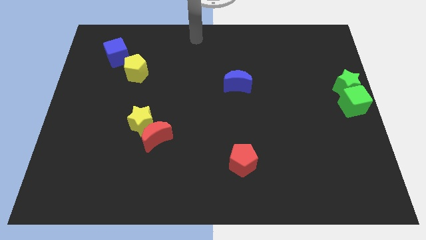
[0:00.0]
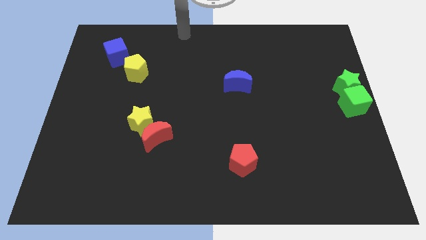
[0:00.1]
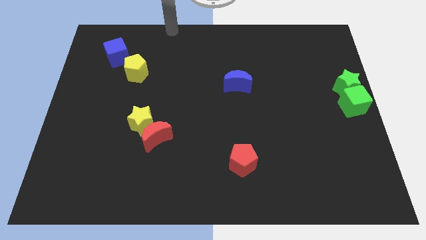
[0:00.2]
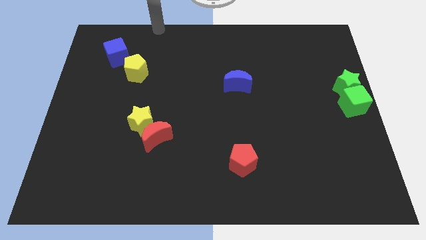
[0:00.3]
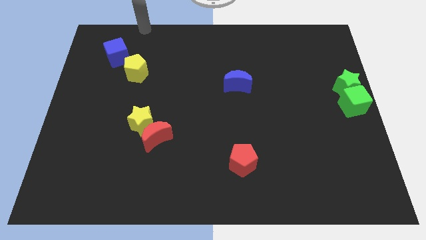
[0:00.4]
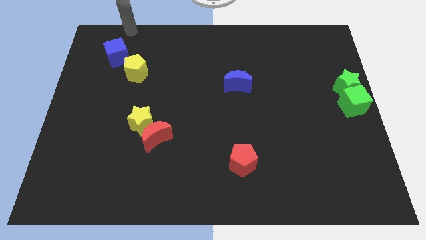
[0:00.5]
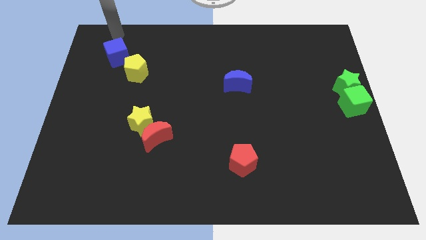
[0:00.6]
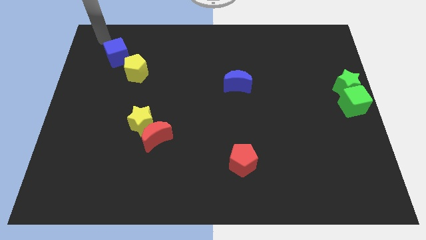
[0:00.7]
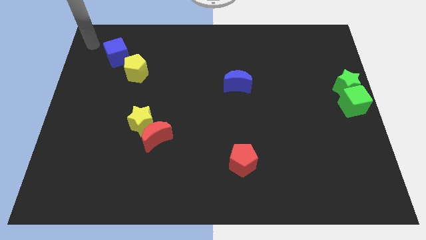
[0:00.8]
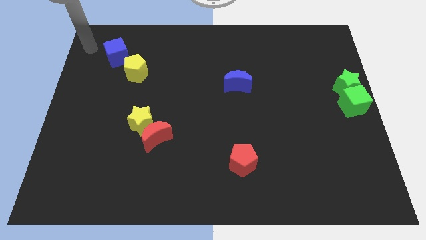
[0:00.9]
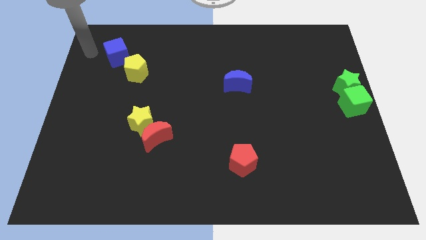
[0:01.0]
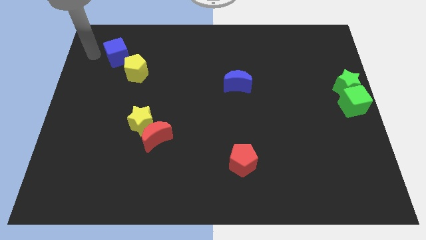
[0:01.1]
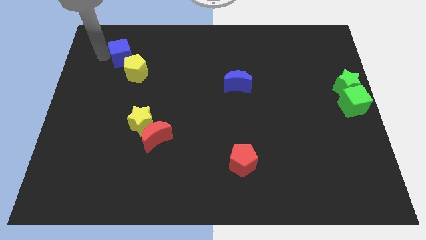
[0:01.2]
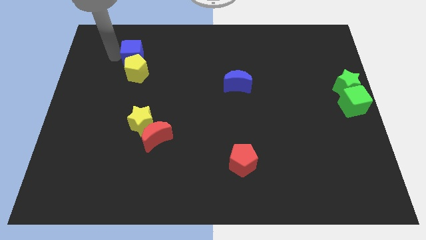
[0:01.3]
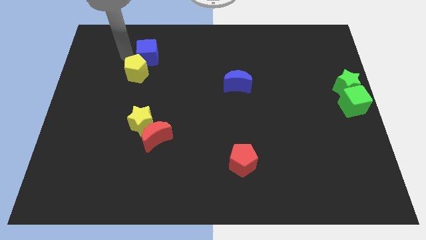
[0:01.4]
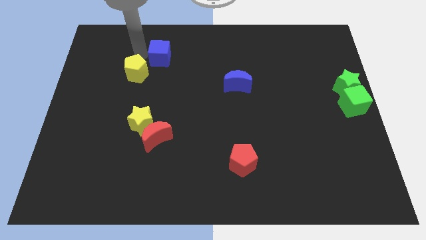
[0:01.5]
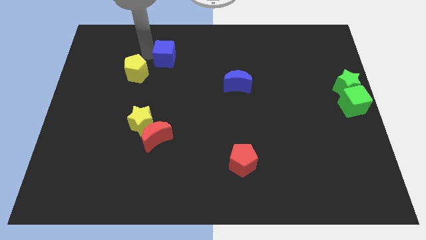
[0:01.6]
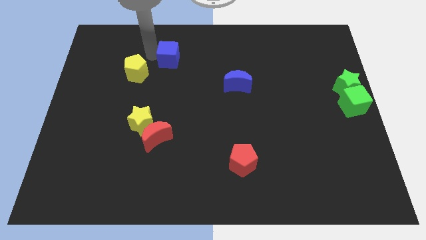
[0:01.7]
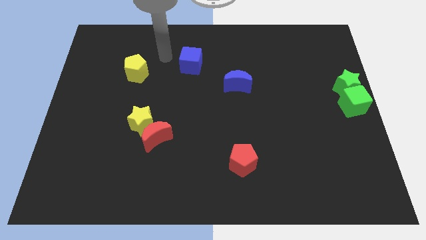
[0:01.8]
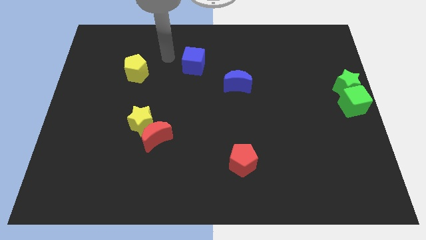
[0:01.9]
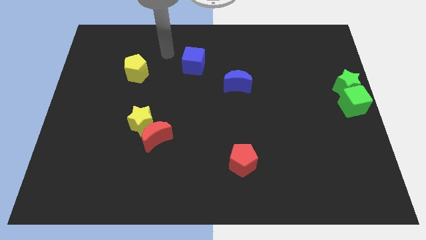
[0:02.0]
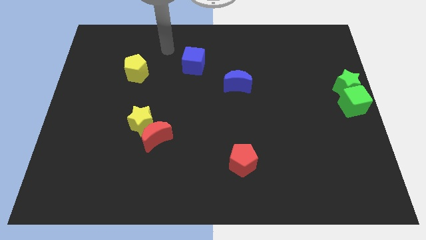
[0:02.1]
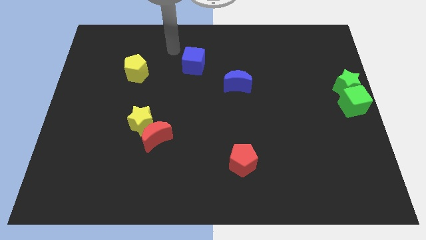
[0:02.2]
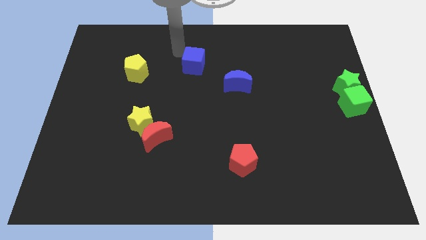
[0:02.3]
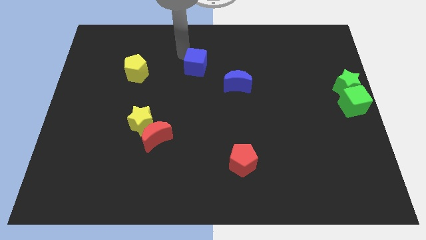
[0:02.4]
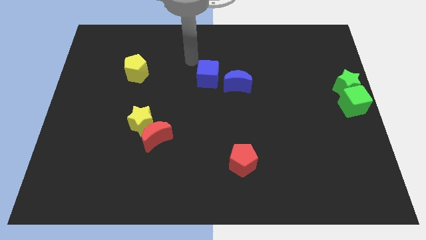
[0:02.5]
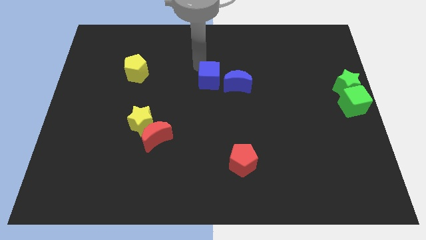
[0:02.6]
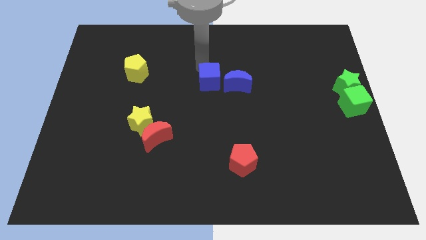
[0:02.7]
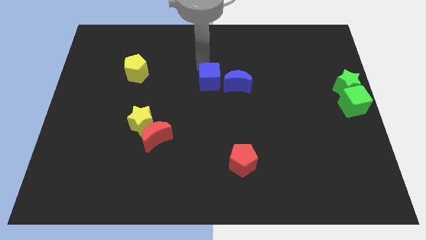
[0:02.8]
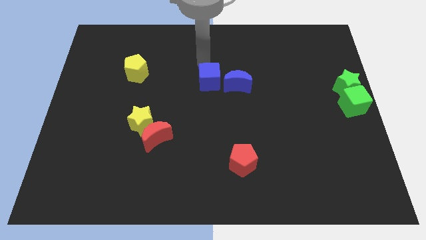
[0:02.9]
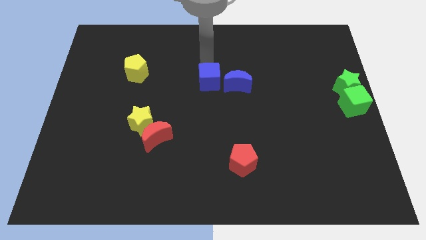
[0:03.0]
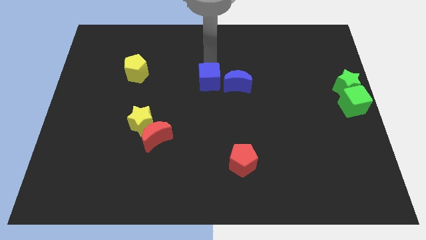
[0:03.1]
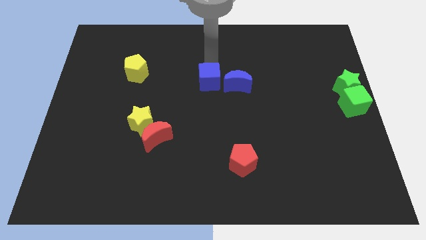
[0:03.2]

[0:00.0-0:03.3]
move the blue cube left to the blue crescent

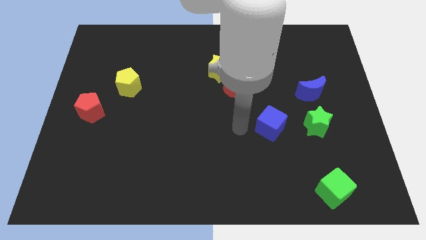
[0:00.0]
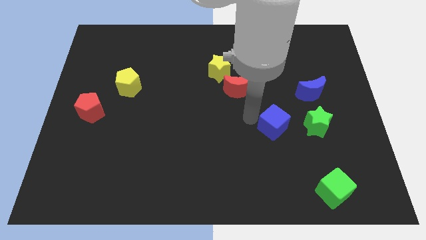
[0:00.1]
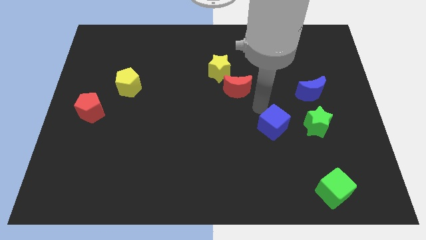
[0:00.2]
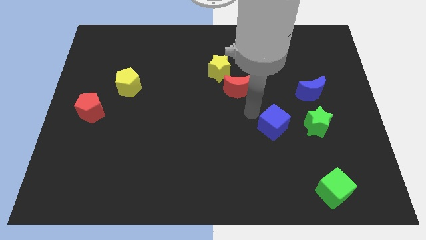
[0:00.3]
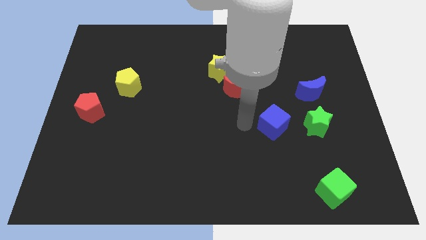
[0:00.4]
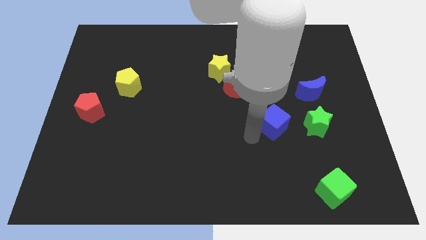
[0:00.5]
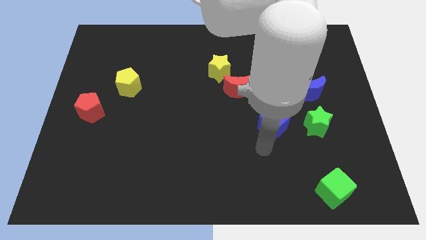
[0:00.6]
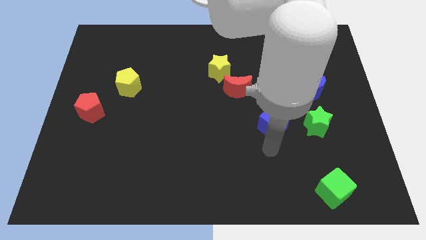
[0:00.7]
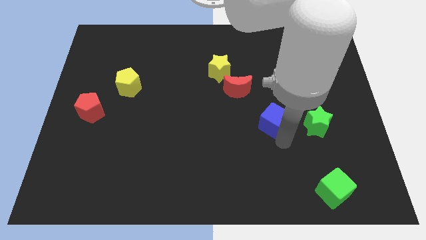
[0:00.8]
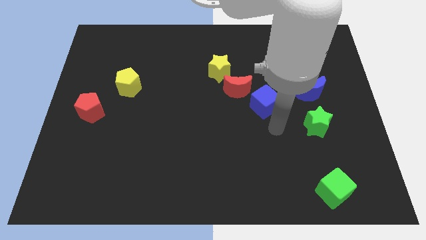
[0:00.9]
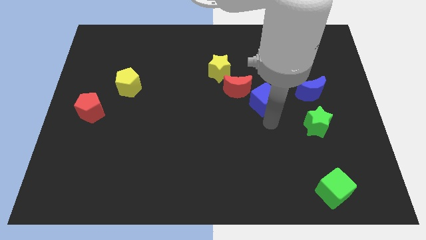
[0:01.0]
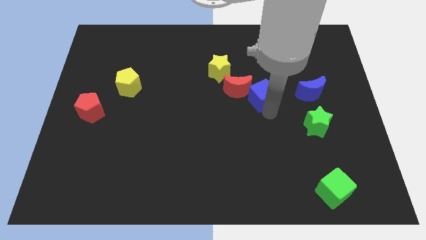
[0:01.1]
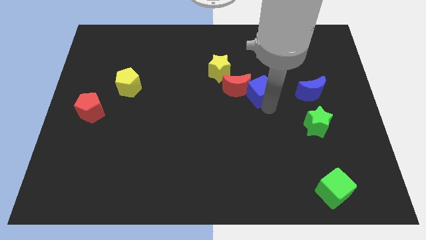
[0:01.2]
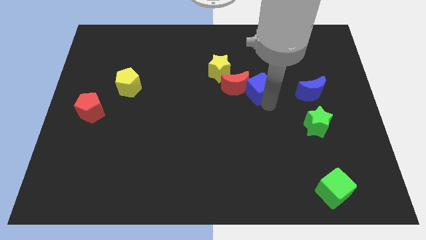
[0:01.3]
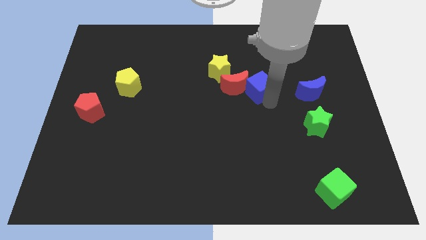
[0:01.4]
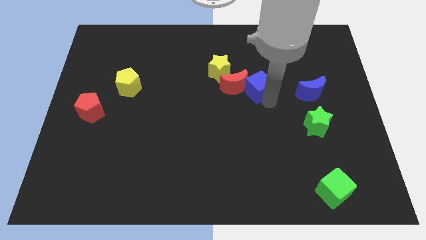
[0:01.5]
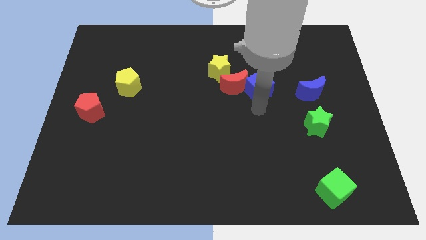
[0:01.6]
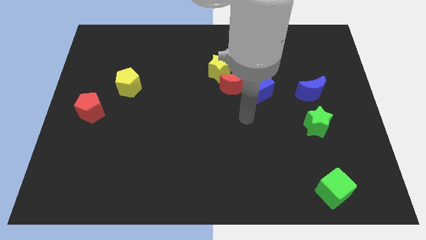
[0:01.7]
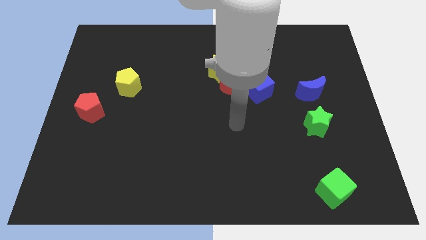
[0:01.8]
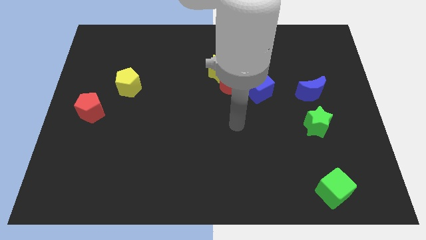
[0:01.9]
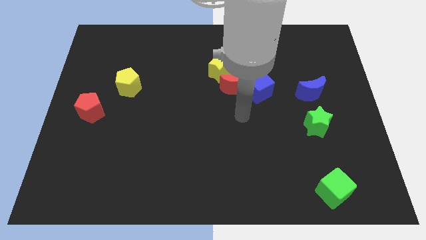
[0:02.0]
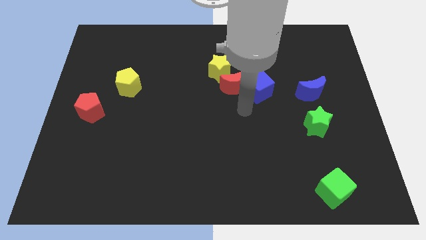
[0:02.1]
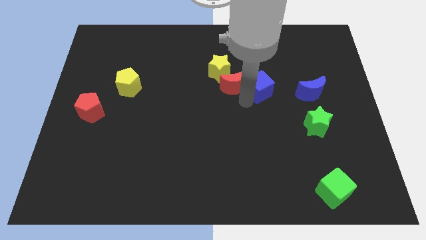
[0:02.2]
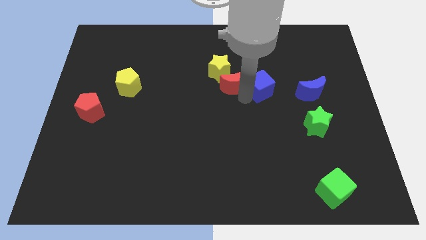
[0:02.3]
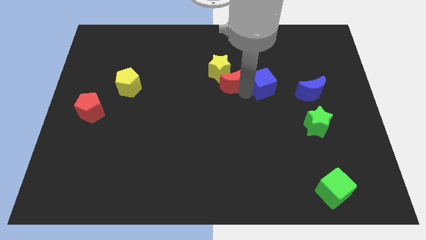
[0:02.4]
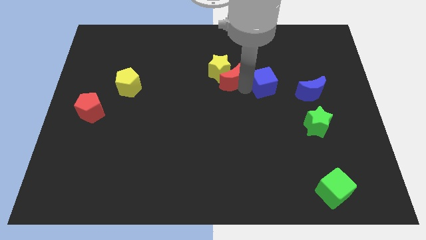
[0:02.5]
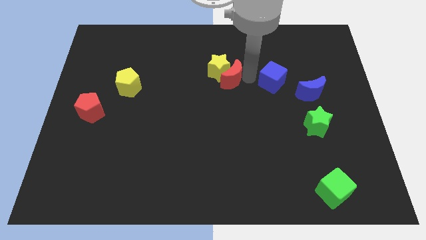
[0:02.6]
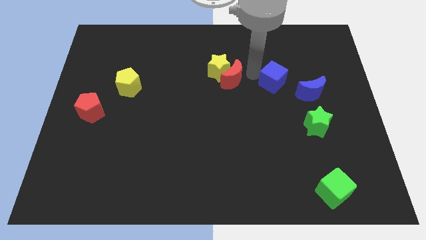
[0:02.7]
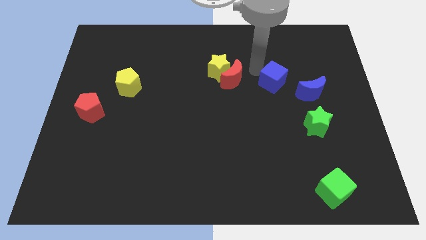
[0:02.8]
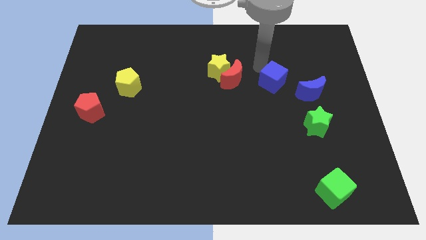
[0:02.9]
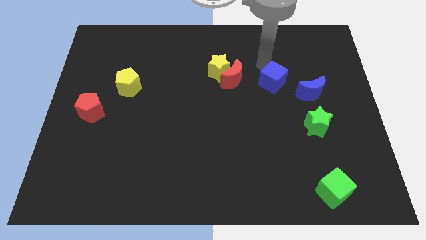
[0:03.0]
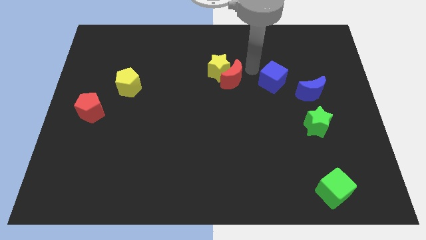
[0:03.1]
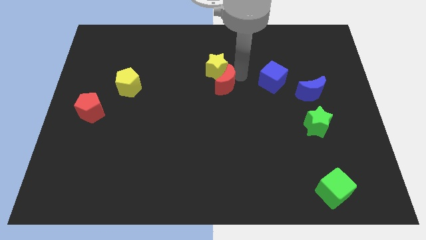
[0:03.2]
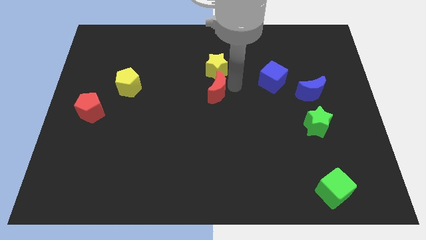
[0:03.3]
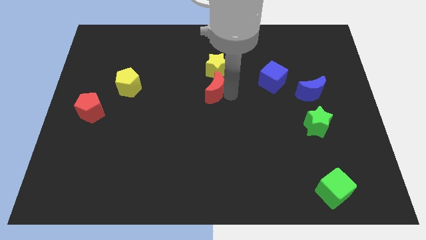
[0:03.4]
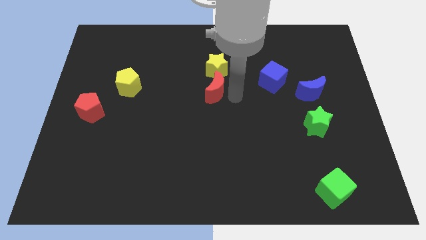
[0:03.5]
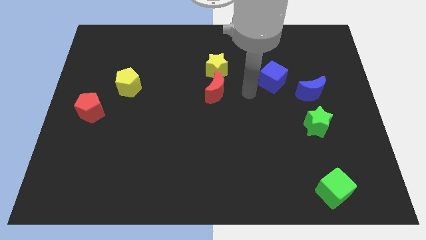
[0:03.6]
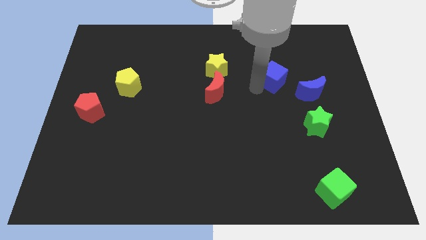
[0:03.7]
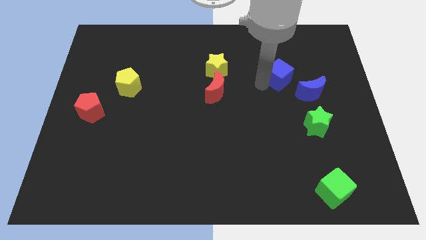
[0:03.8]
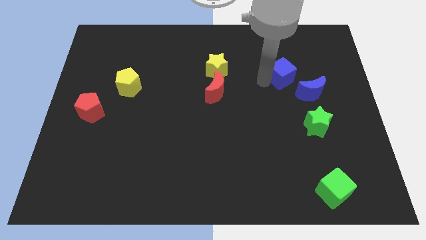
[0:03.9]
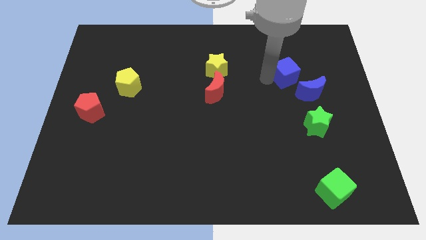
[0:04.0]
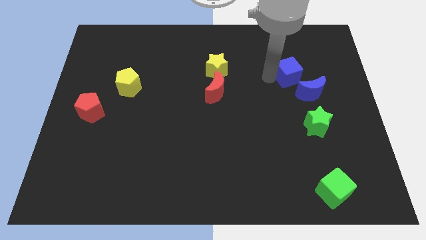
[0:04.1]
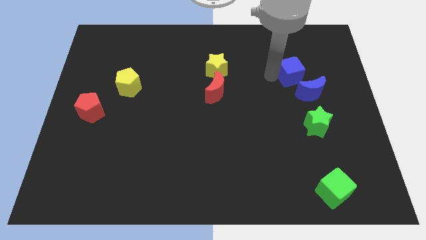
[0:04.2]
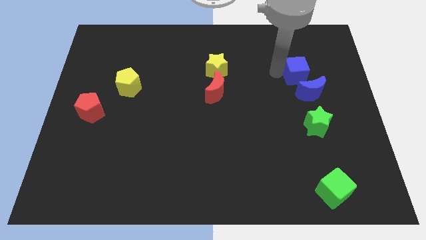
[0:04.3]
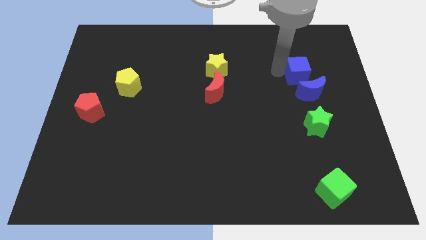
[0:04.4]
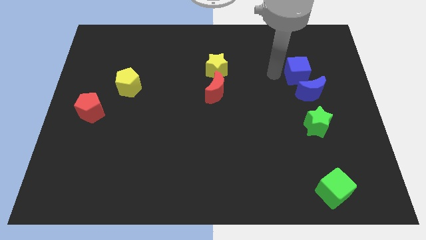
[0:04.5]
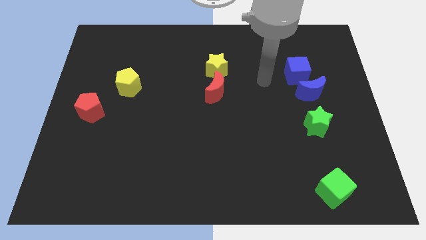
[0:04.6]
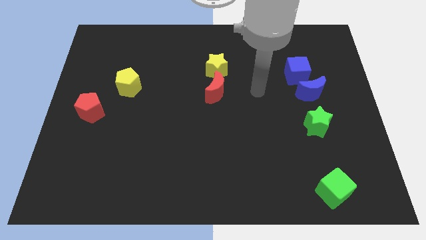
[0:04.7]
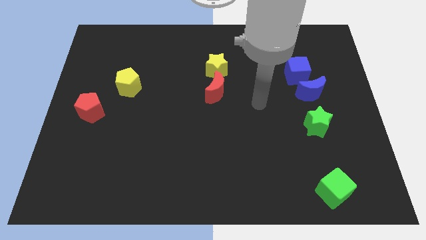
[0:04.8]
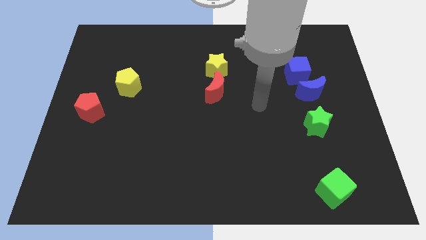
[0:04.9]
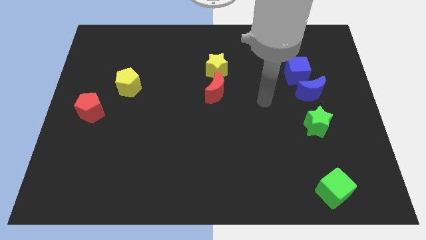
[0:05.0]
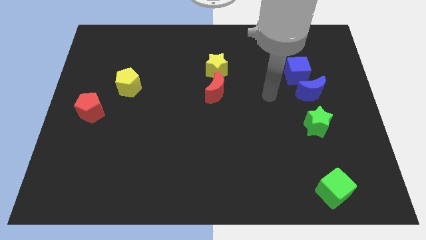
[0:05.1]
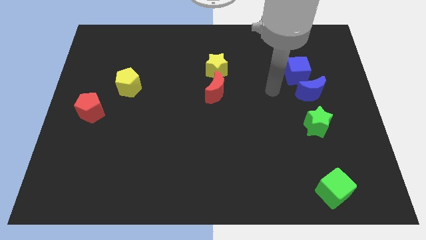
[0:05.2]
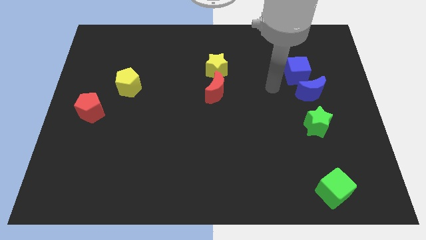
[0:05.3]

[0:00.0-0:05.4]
push the blue cube to the top left of the blue crescent

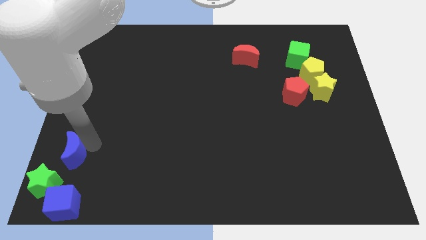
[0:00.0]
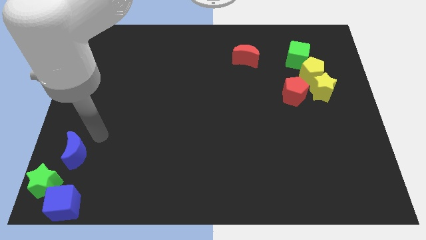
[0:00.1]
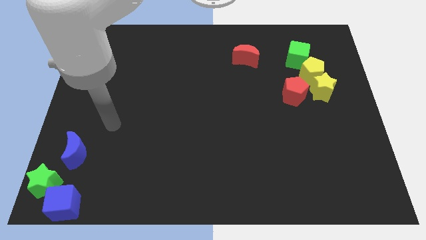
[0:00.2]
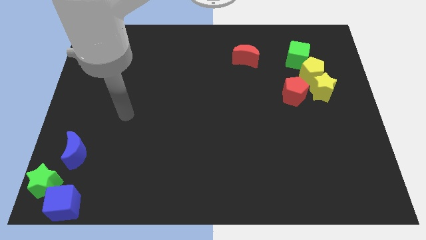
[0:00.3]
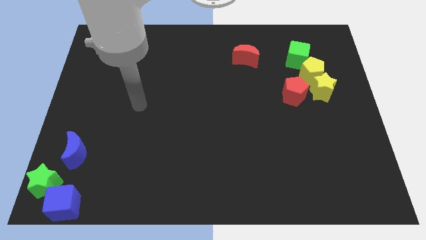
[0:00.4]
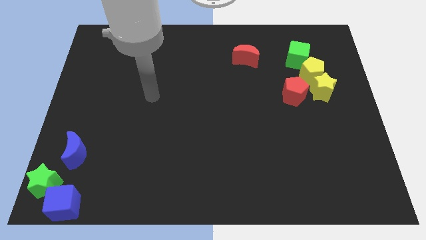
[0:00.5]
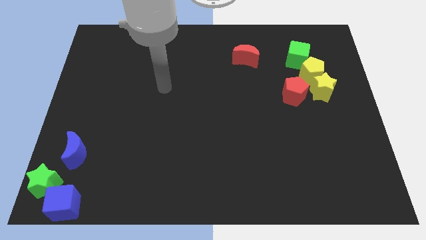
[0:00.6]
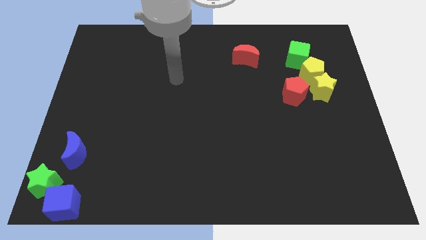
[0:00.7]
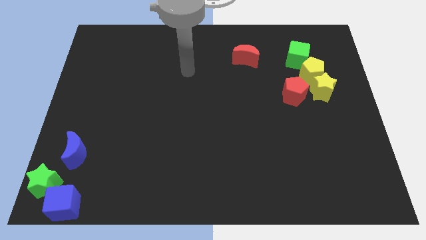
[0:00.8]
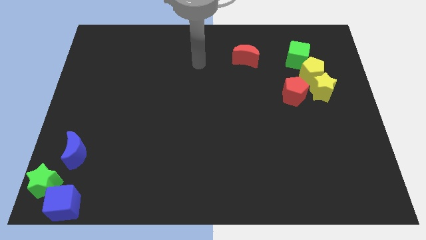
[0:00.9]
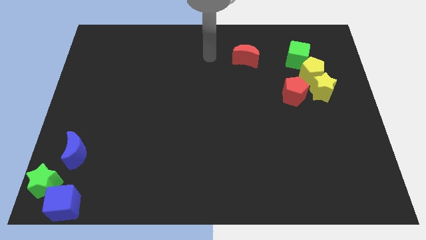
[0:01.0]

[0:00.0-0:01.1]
point the arm at the left side of the red crescent
